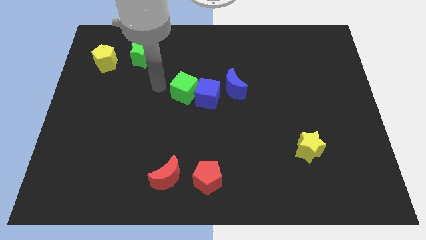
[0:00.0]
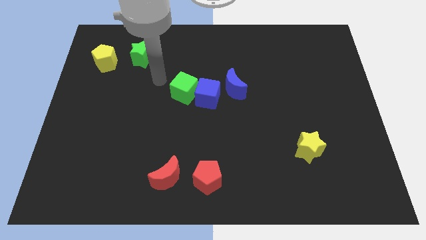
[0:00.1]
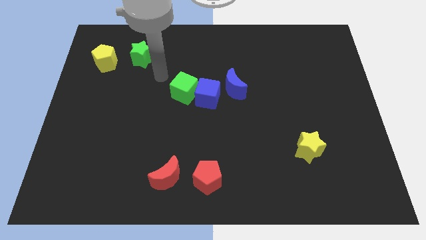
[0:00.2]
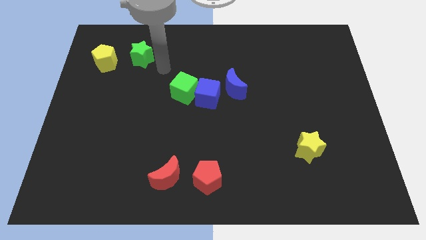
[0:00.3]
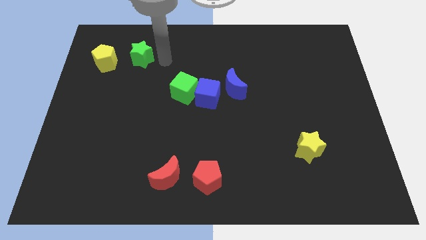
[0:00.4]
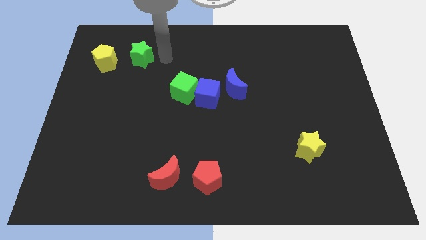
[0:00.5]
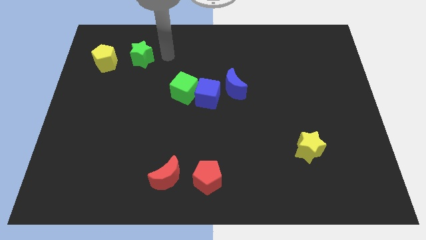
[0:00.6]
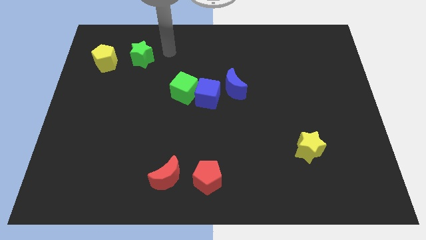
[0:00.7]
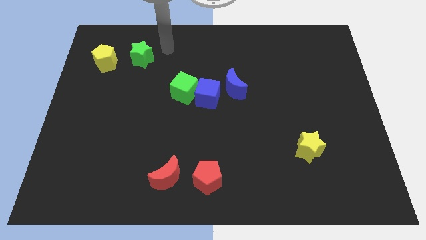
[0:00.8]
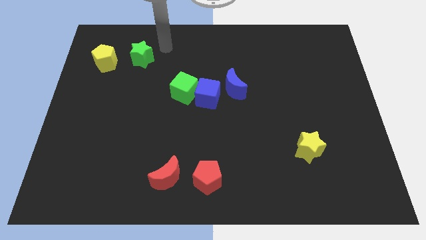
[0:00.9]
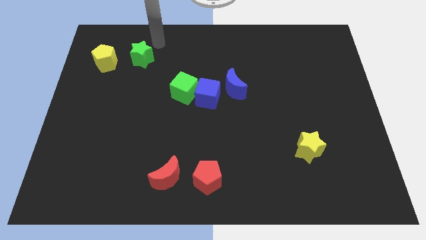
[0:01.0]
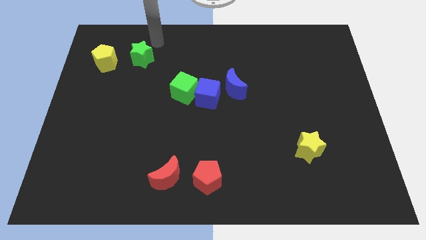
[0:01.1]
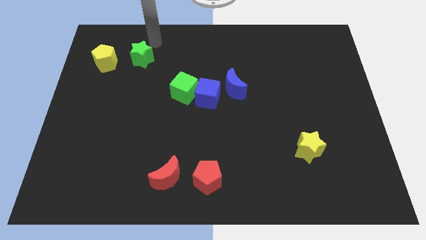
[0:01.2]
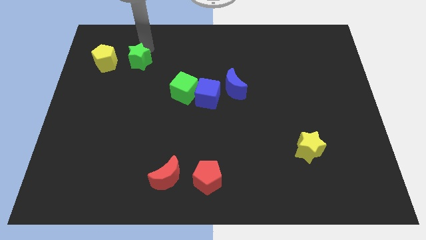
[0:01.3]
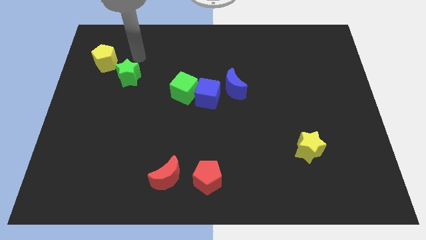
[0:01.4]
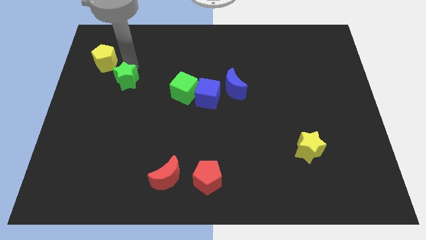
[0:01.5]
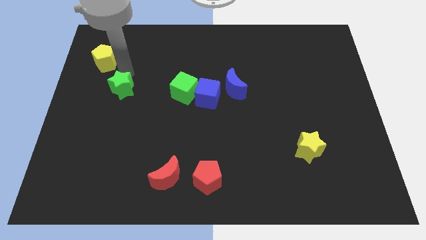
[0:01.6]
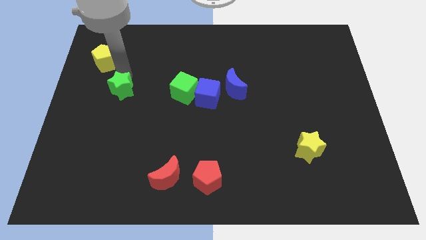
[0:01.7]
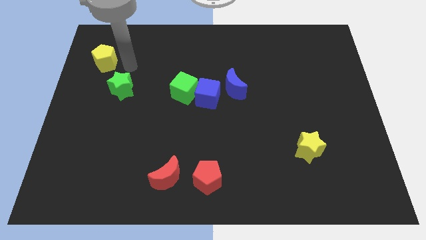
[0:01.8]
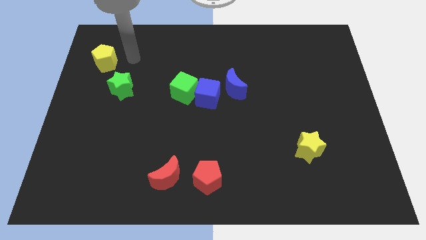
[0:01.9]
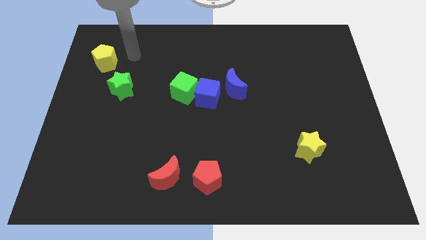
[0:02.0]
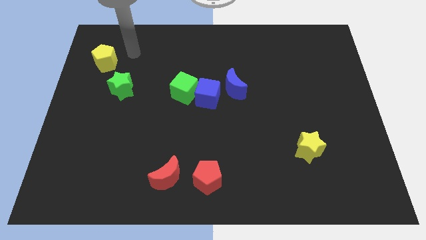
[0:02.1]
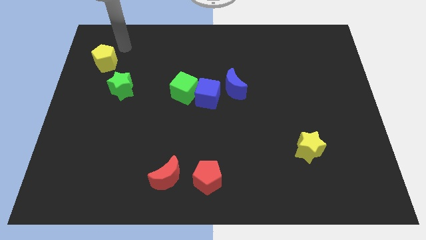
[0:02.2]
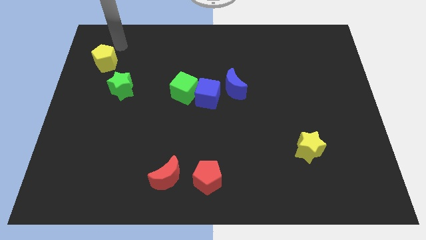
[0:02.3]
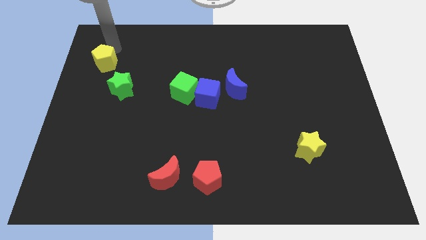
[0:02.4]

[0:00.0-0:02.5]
move the green star towards the bottom

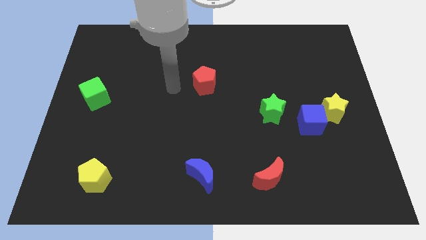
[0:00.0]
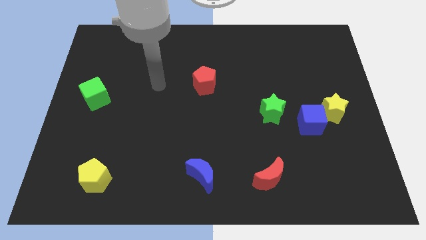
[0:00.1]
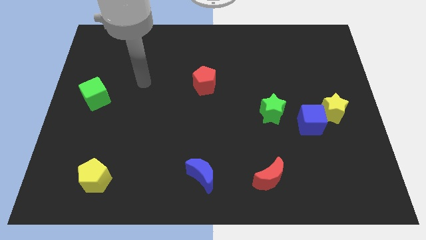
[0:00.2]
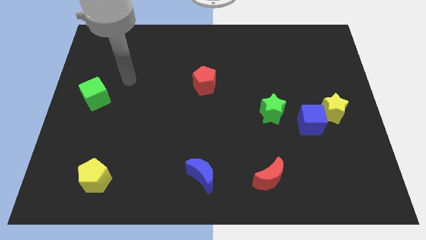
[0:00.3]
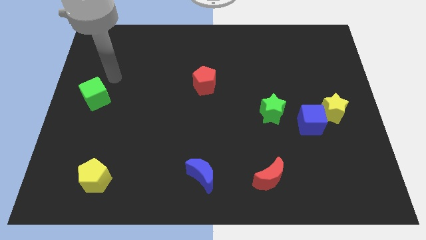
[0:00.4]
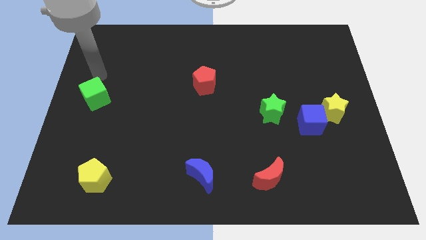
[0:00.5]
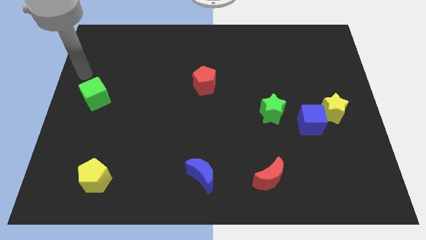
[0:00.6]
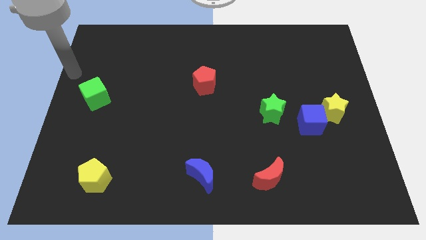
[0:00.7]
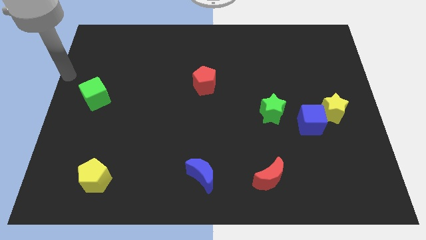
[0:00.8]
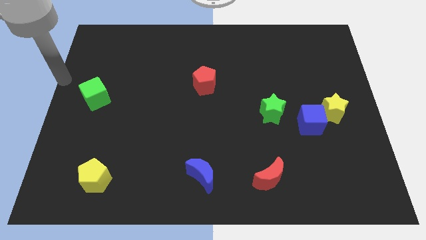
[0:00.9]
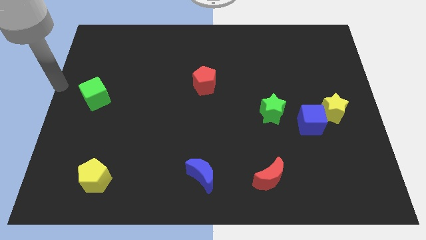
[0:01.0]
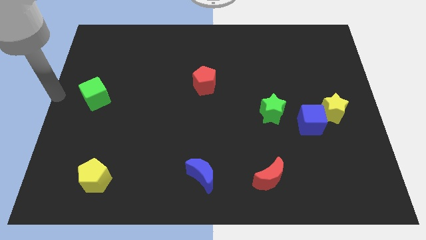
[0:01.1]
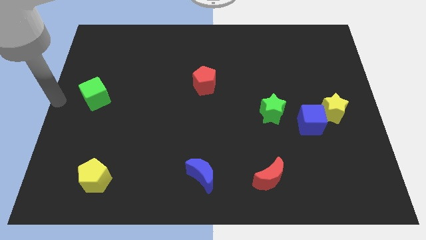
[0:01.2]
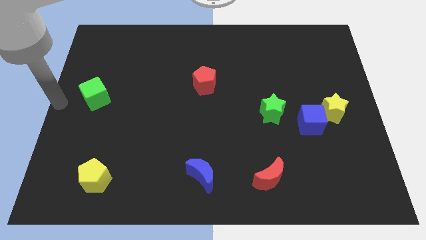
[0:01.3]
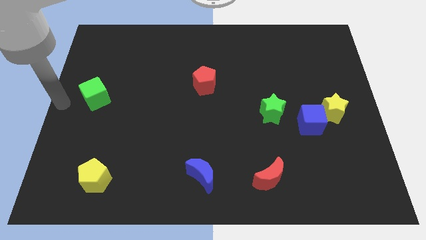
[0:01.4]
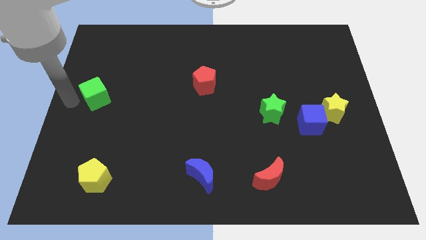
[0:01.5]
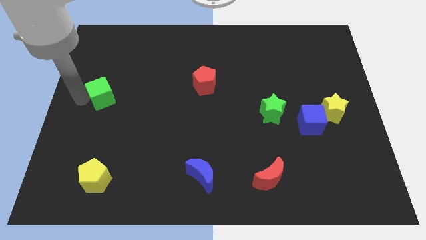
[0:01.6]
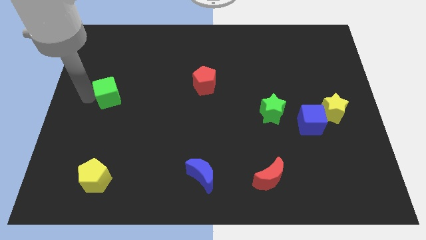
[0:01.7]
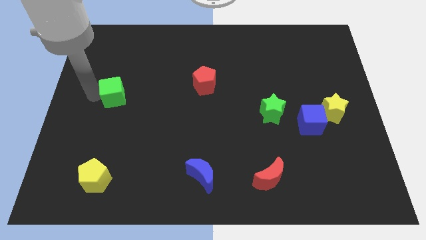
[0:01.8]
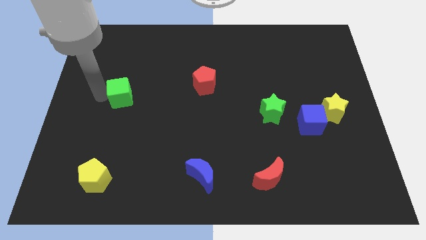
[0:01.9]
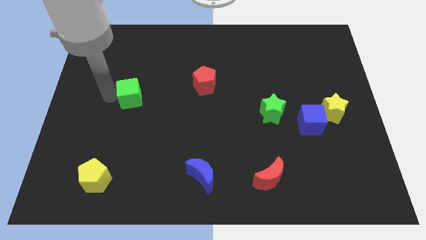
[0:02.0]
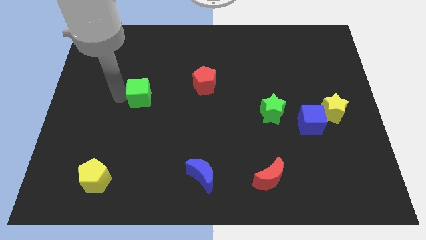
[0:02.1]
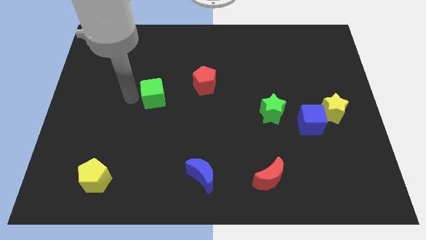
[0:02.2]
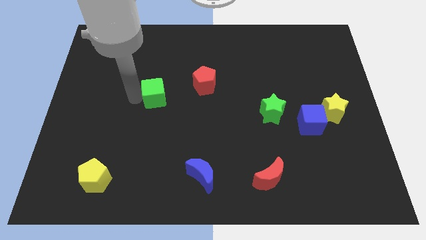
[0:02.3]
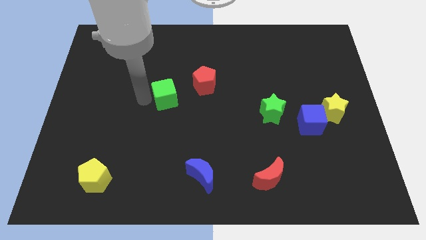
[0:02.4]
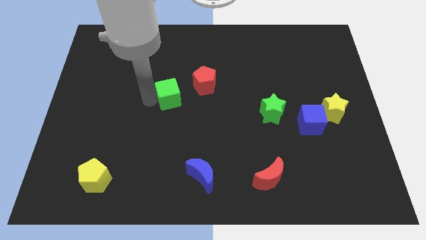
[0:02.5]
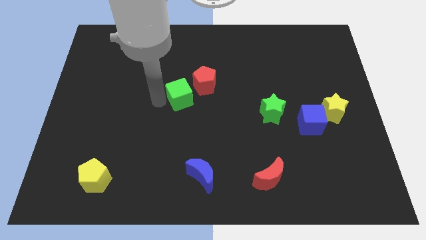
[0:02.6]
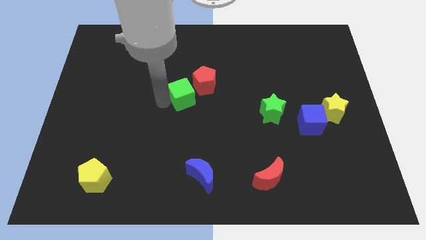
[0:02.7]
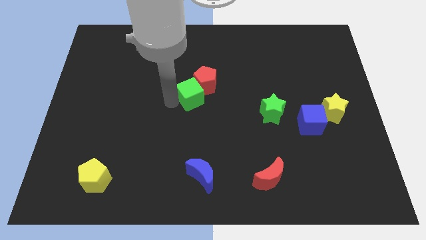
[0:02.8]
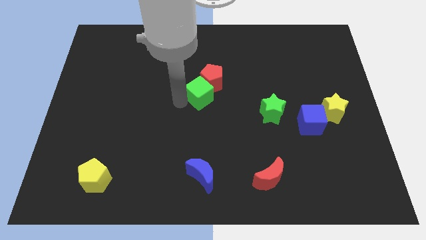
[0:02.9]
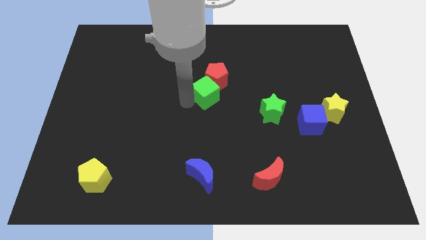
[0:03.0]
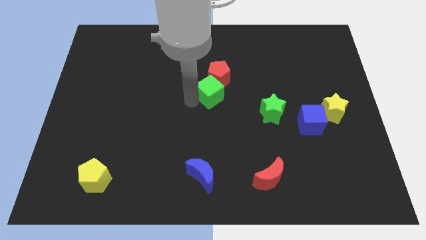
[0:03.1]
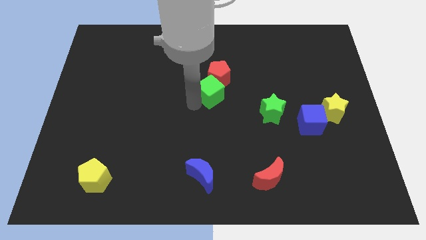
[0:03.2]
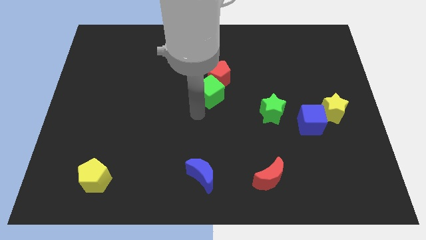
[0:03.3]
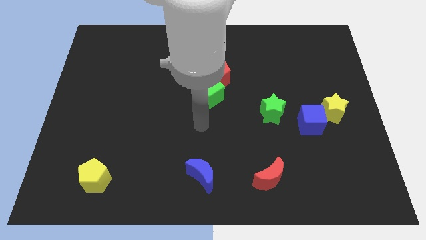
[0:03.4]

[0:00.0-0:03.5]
move the green cube to the bottom of the red pentagon

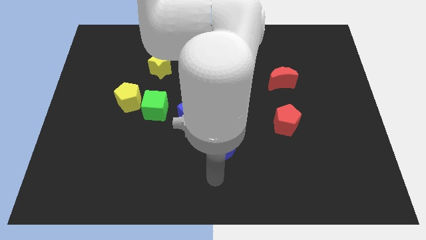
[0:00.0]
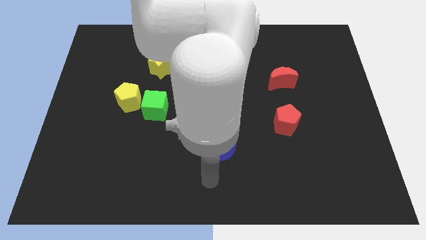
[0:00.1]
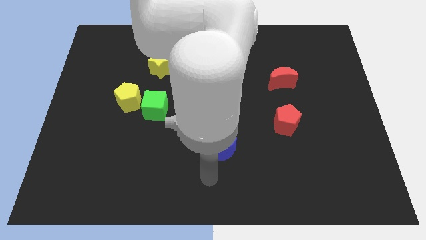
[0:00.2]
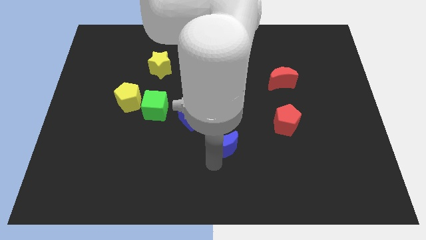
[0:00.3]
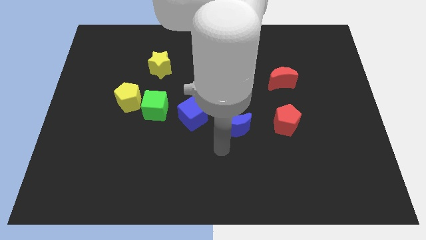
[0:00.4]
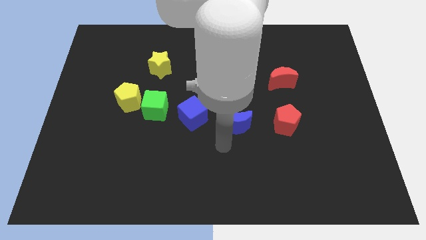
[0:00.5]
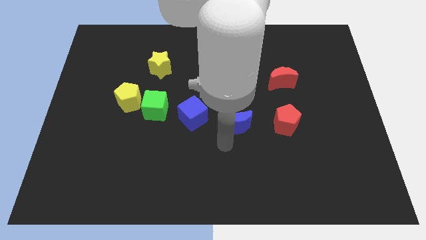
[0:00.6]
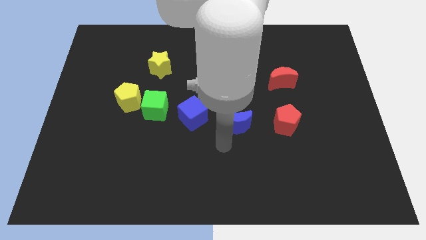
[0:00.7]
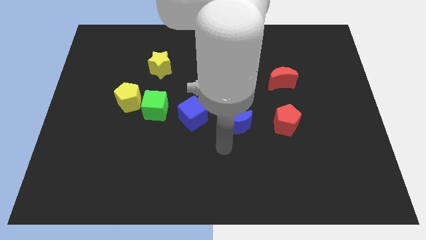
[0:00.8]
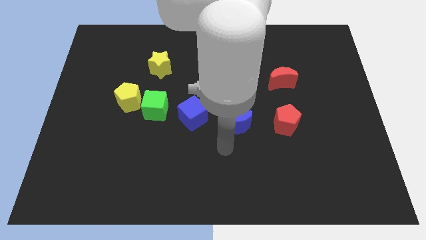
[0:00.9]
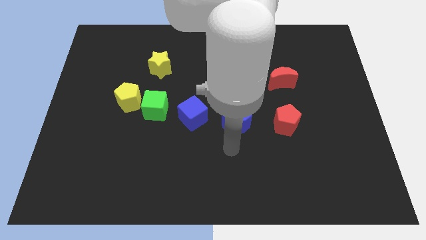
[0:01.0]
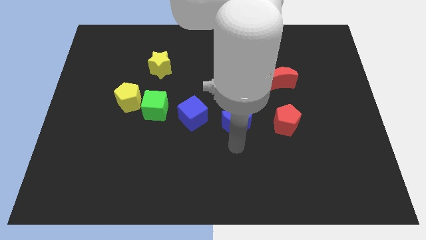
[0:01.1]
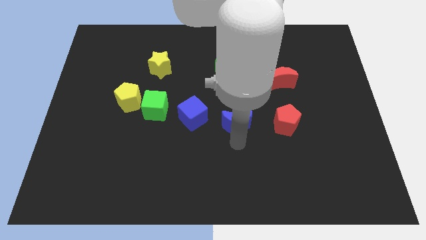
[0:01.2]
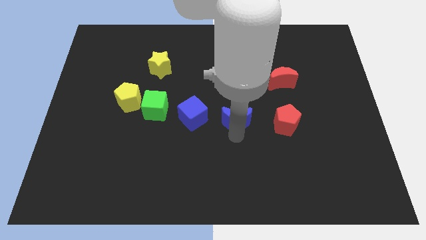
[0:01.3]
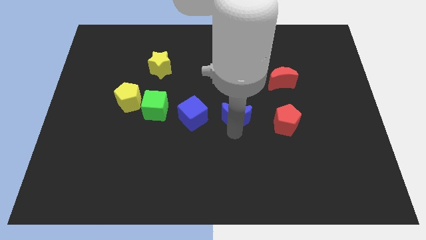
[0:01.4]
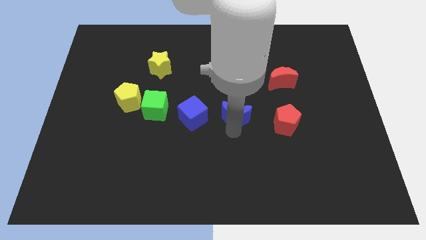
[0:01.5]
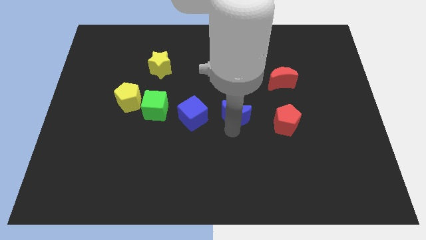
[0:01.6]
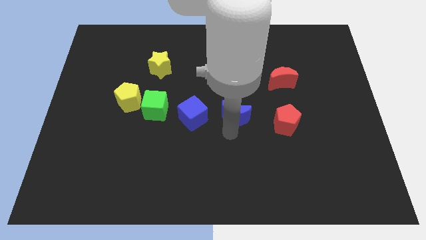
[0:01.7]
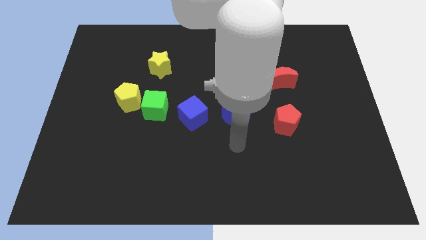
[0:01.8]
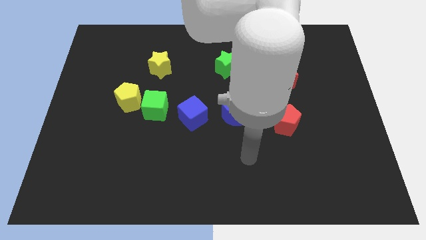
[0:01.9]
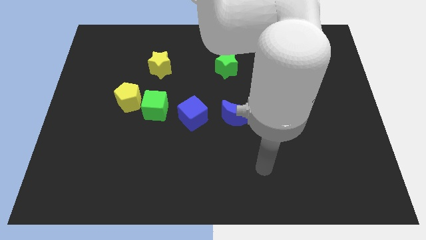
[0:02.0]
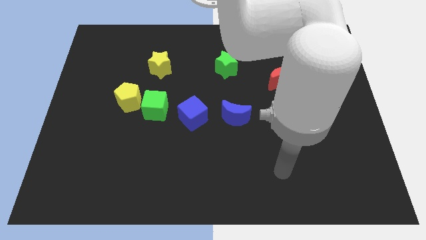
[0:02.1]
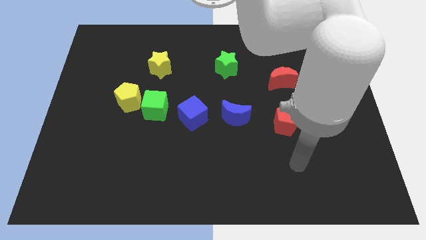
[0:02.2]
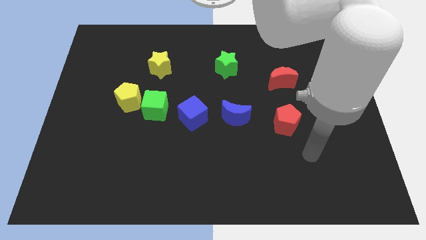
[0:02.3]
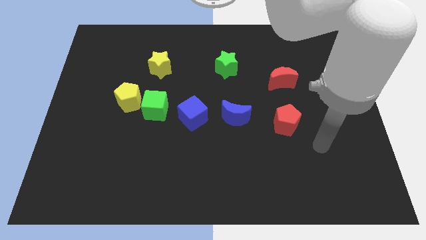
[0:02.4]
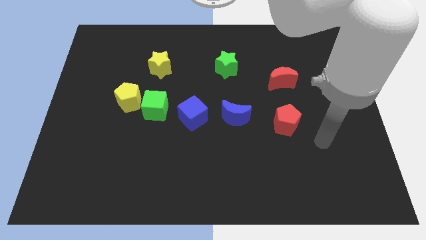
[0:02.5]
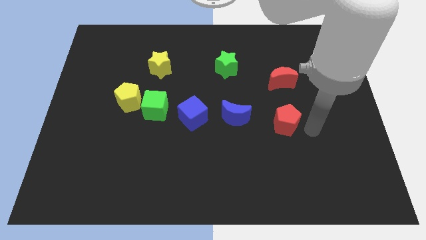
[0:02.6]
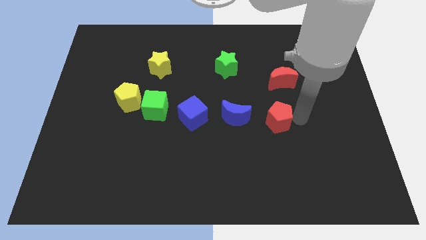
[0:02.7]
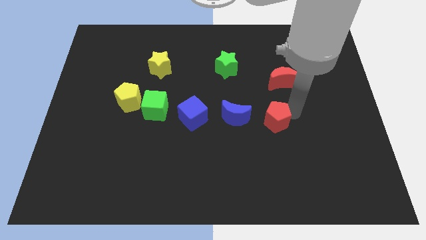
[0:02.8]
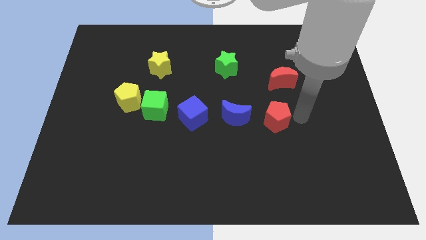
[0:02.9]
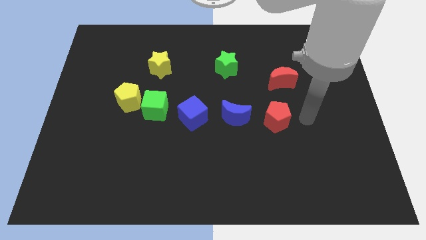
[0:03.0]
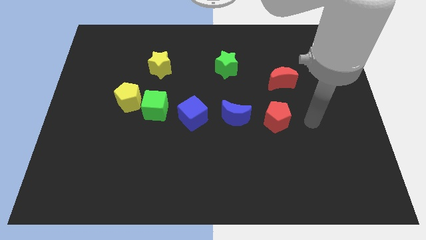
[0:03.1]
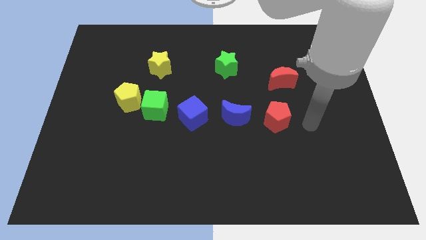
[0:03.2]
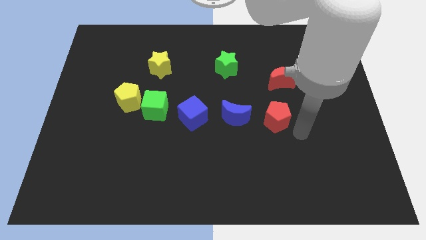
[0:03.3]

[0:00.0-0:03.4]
place the red pentagon to the right of the blue cube
